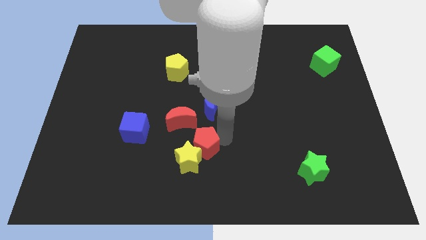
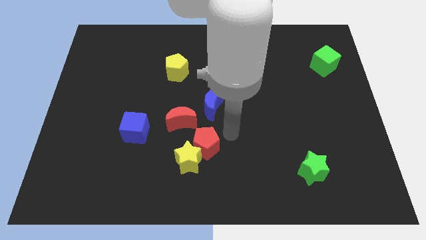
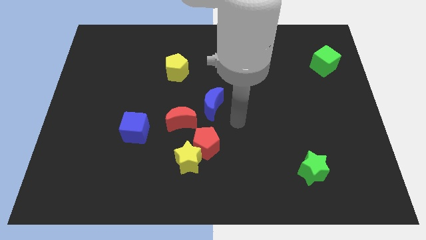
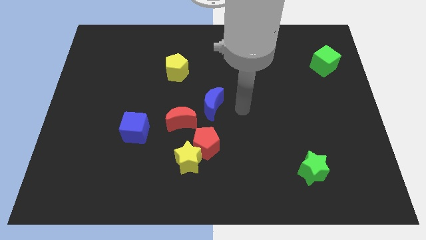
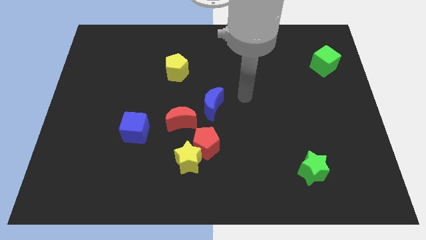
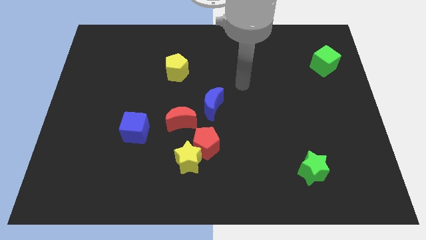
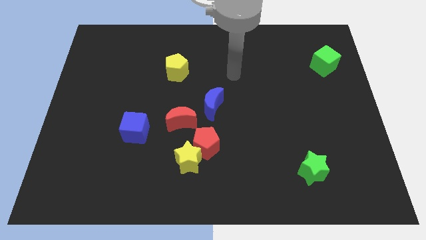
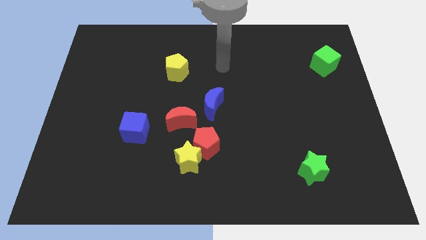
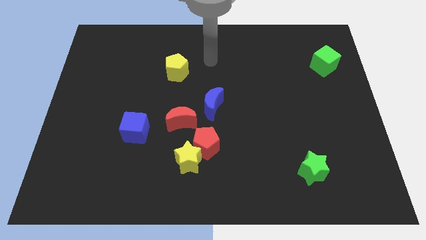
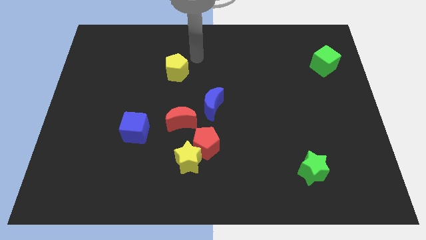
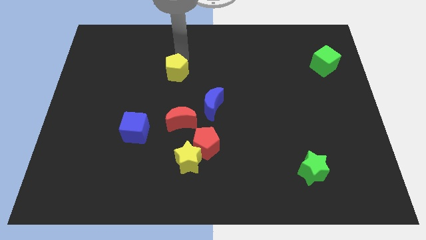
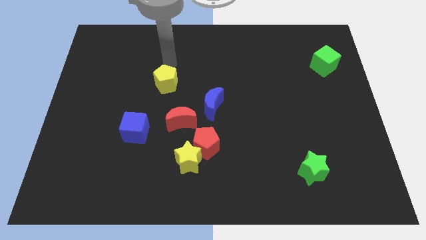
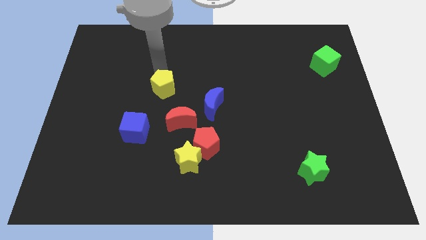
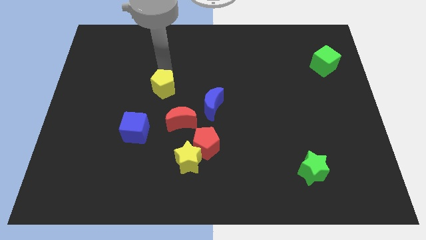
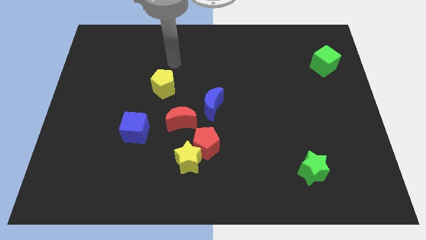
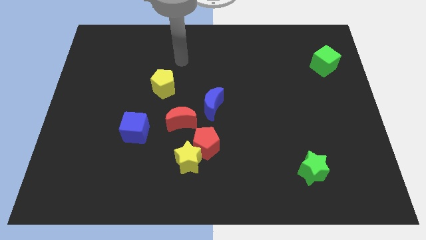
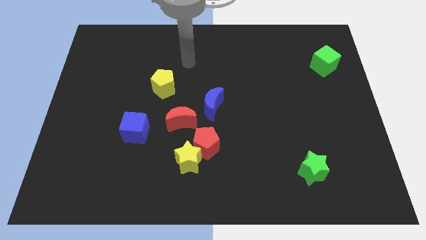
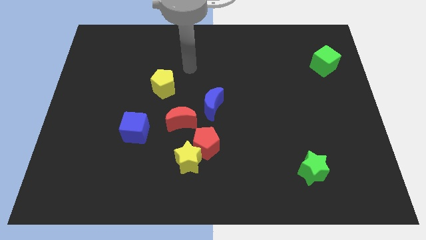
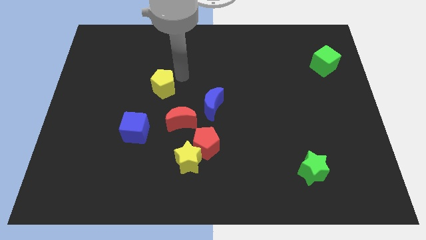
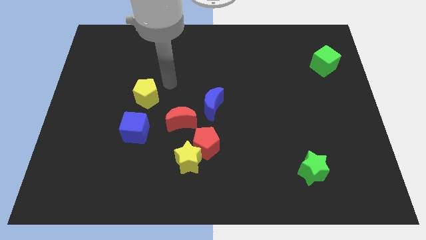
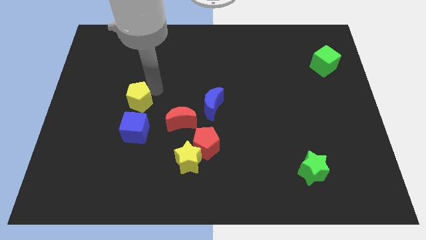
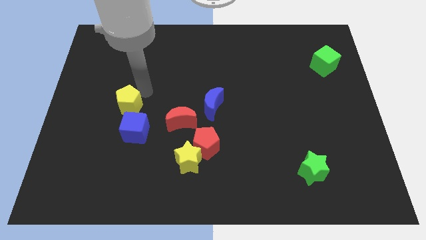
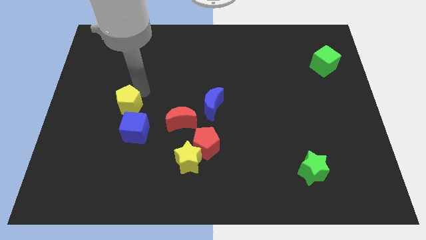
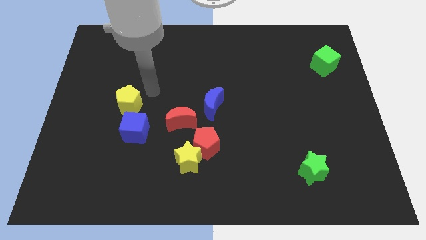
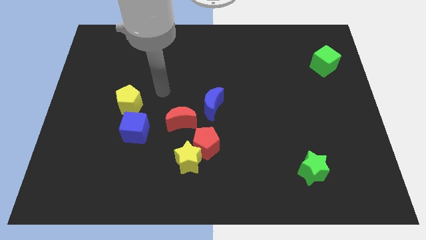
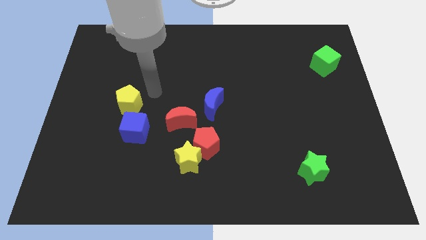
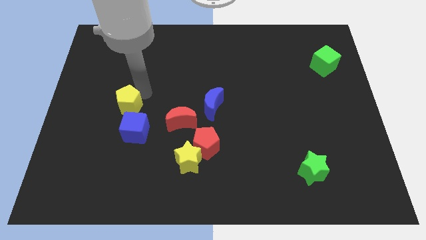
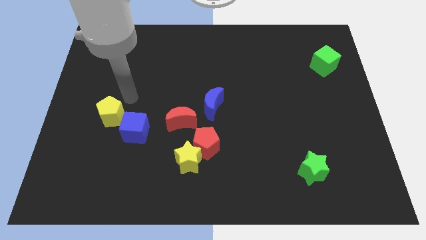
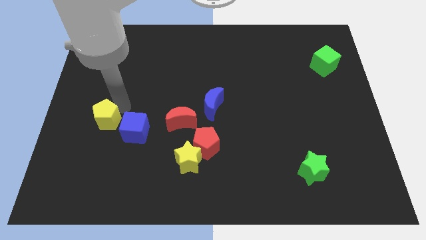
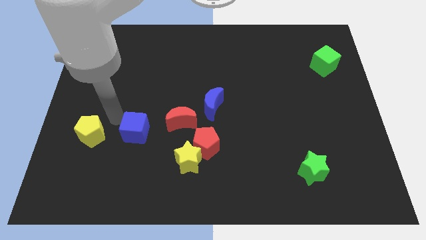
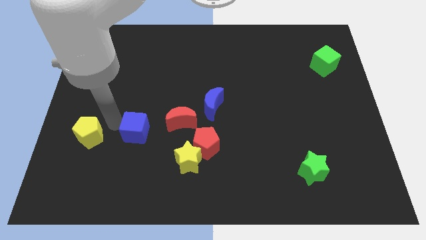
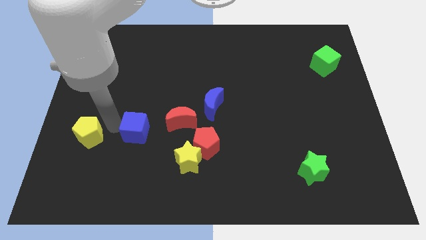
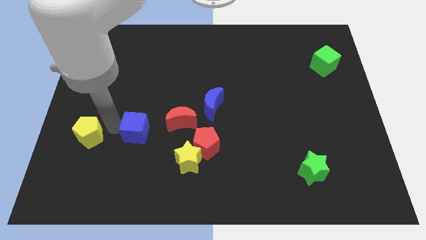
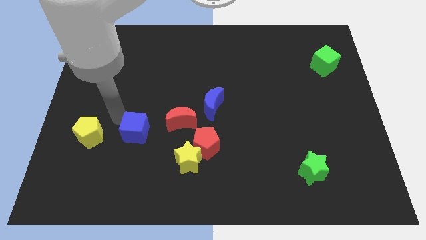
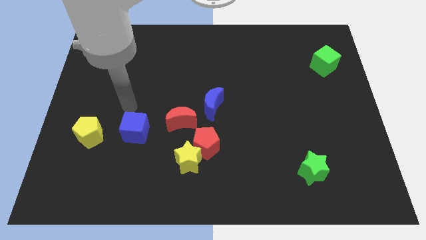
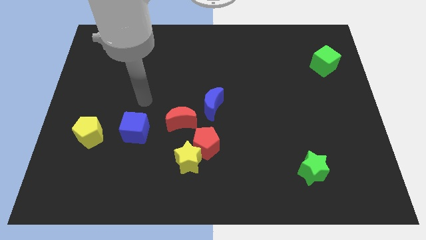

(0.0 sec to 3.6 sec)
place yellow pentagon to the left of blue cube

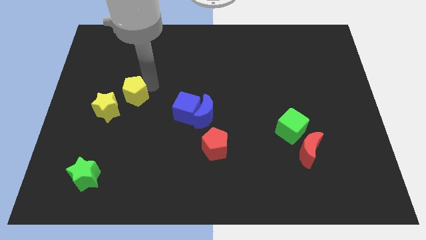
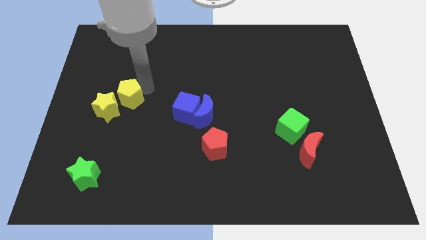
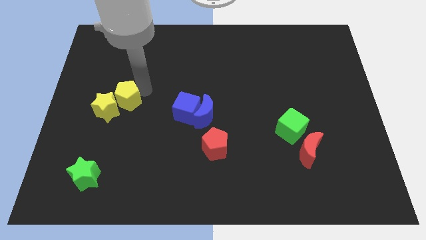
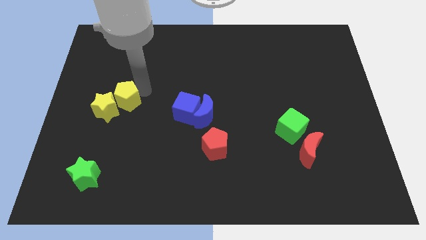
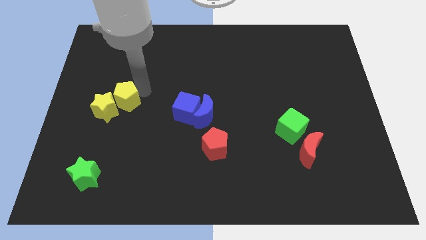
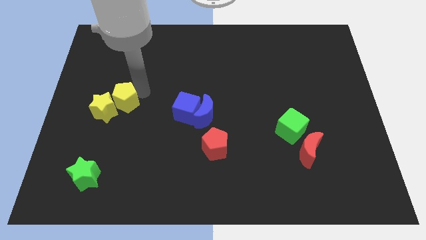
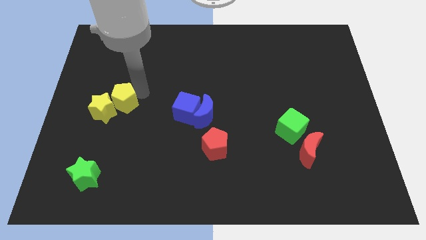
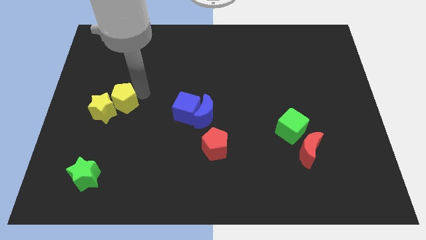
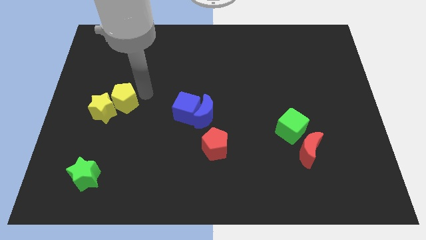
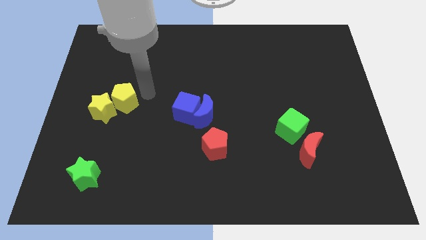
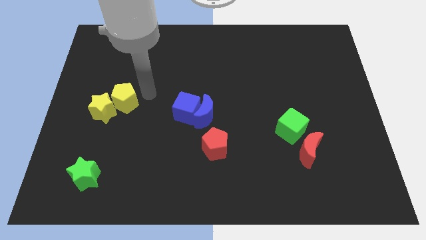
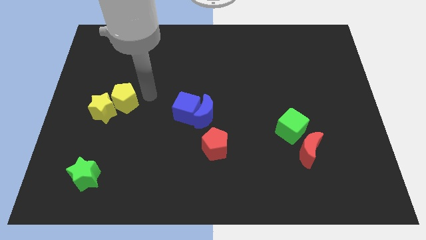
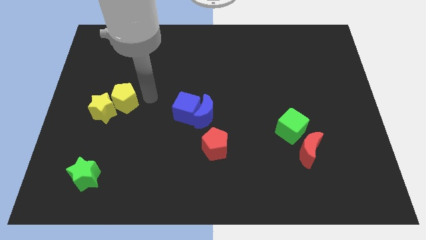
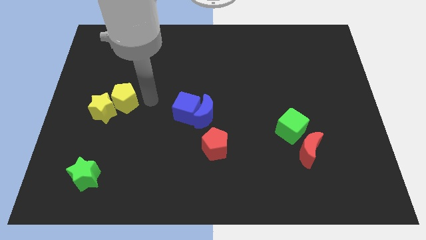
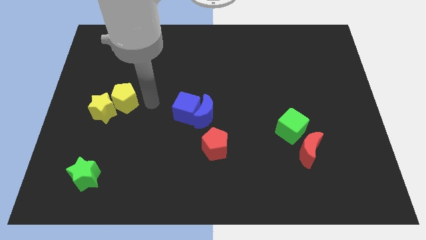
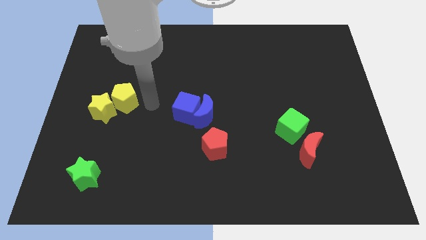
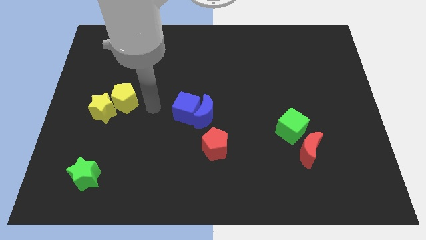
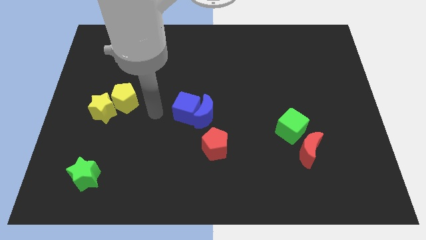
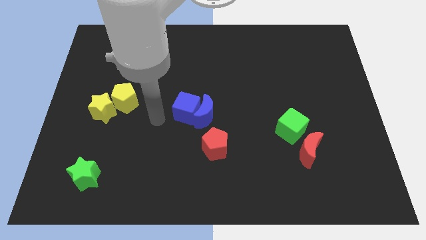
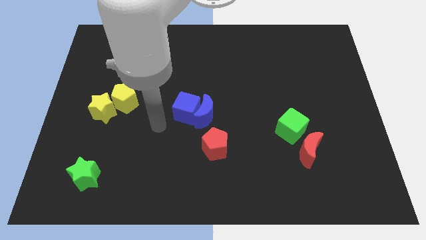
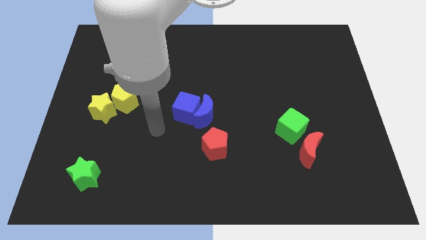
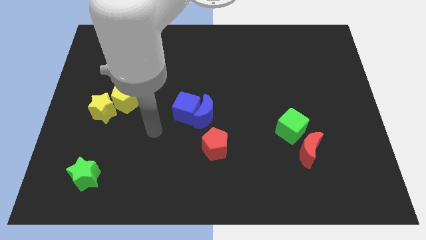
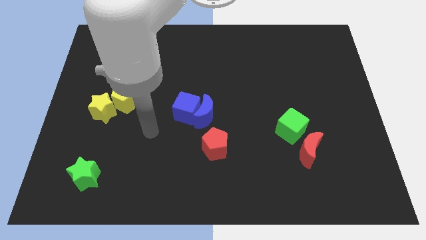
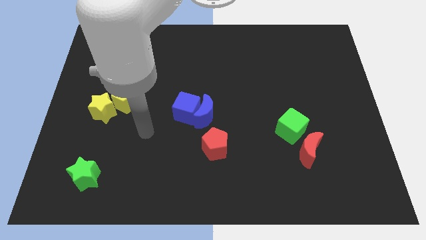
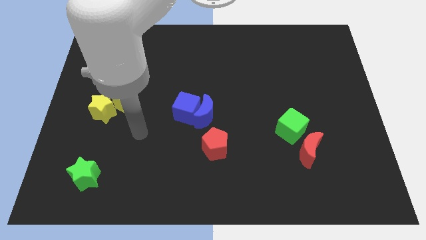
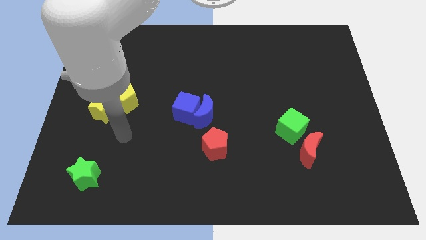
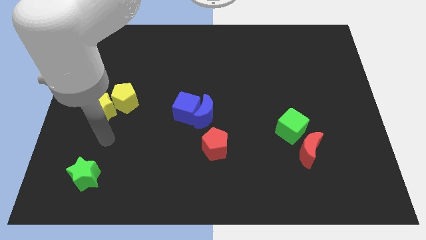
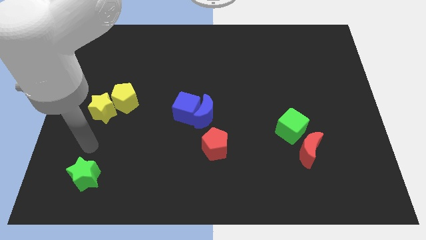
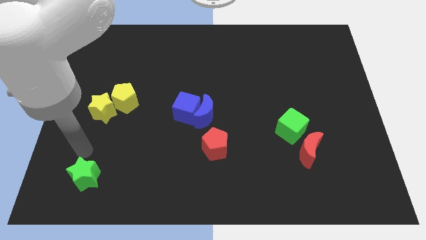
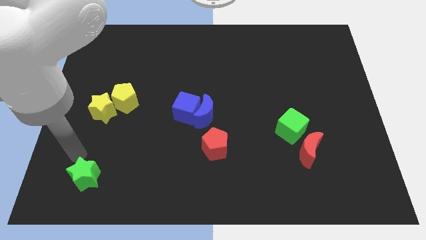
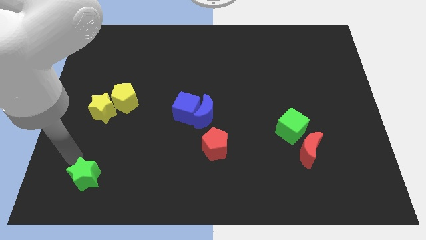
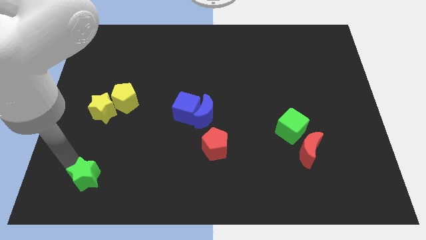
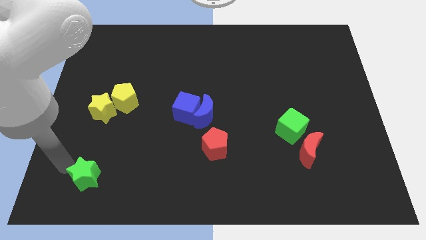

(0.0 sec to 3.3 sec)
move the yellow pentagon into the yellow star

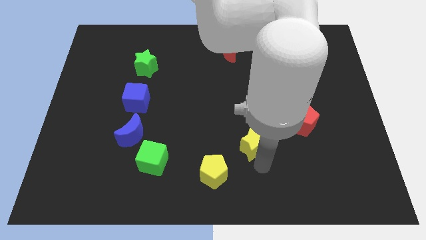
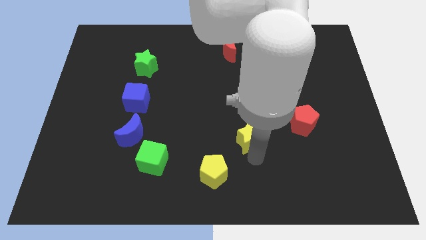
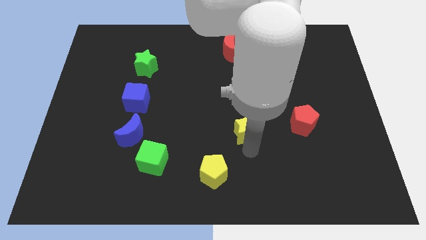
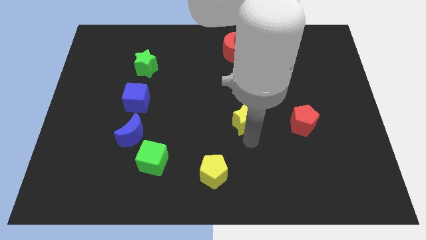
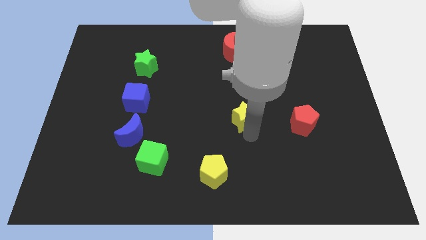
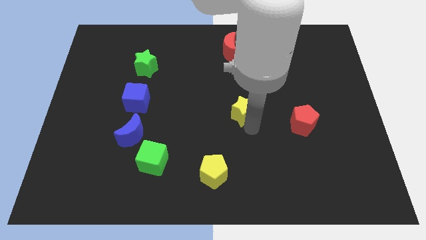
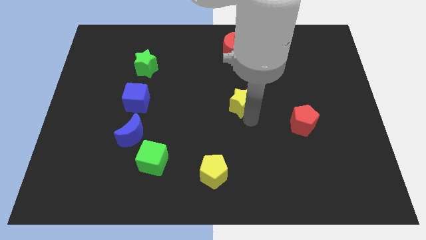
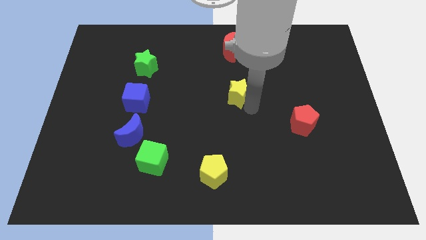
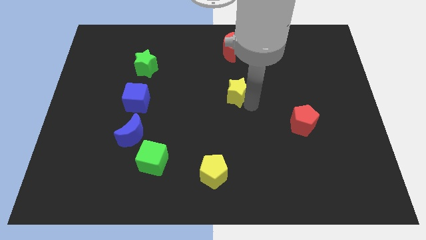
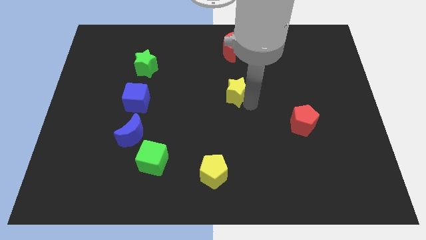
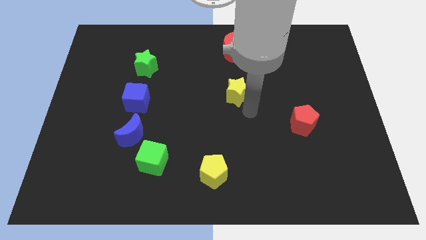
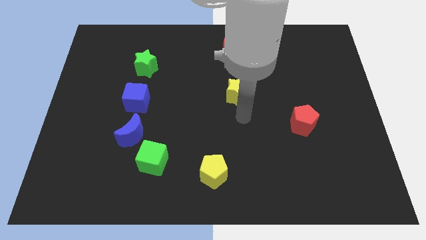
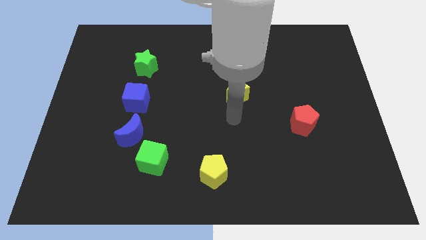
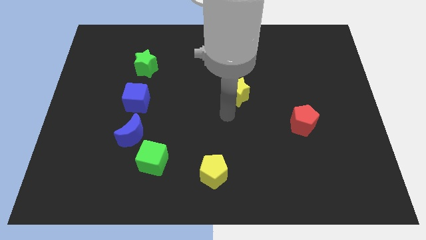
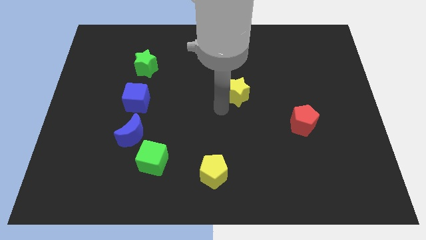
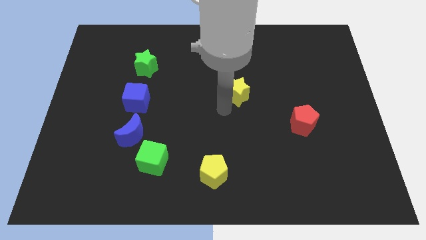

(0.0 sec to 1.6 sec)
slightly move the yellow star towards up

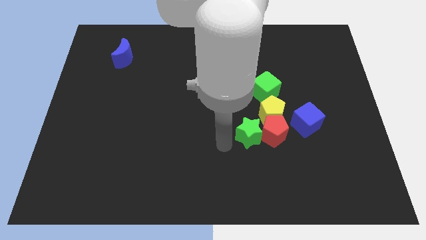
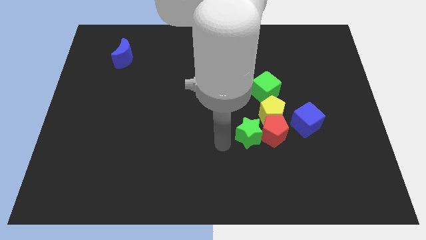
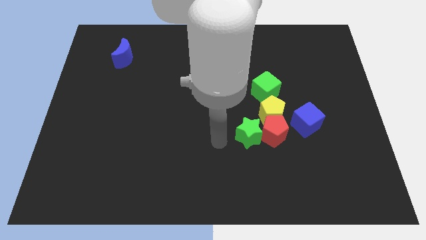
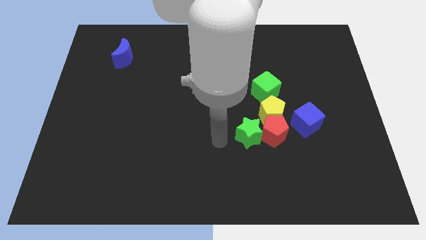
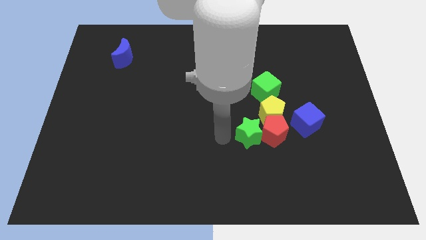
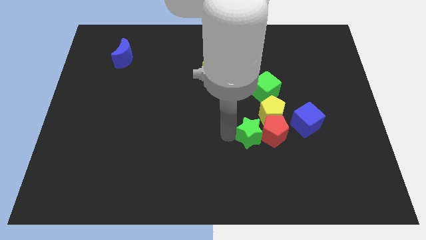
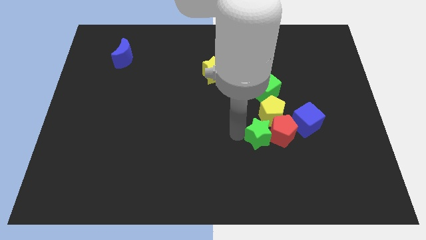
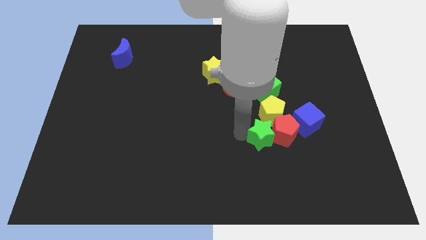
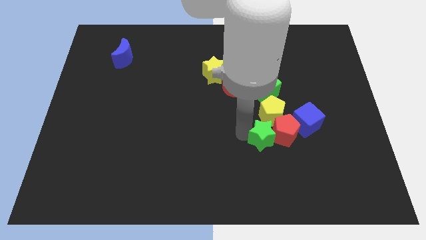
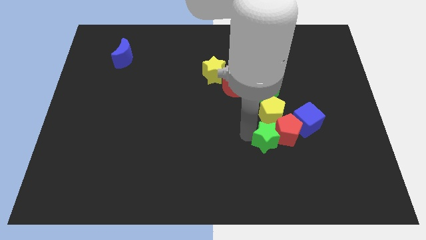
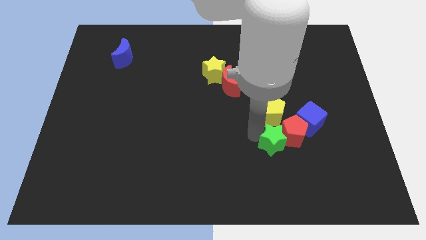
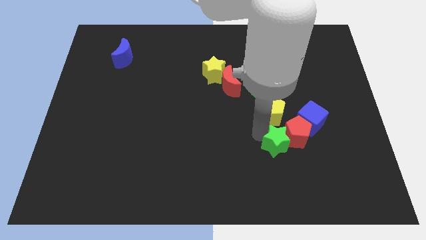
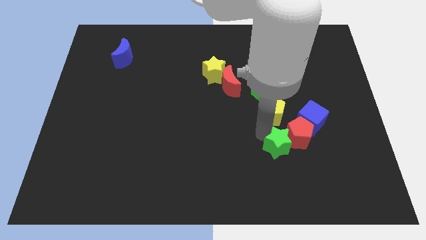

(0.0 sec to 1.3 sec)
slide the red pentagon and green star in to the blue cube
